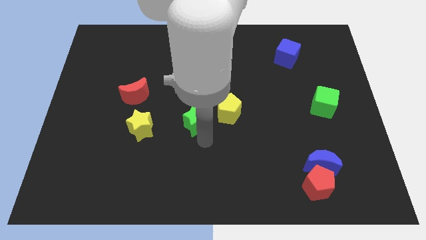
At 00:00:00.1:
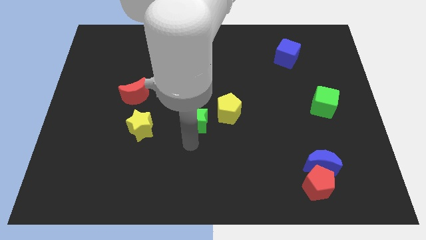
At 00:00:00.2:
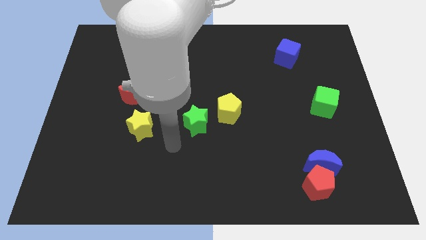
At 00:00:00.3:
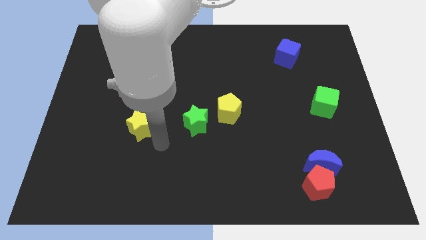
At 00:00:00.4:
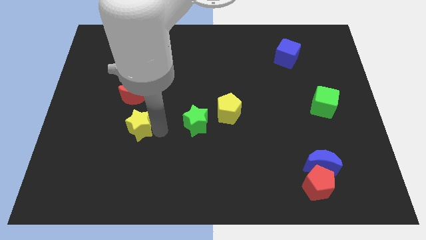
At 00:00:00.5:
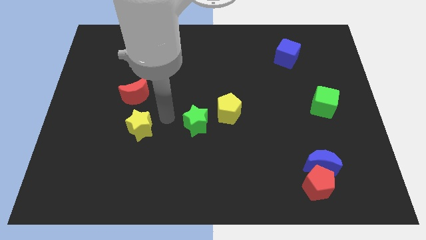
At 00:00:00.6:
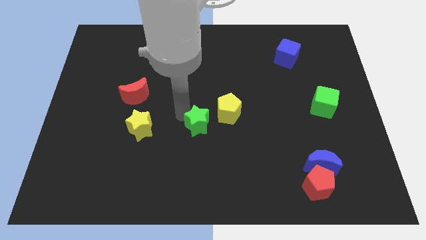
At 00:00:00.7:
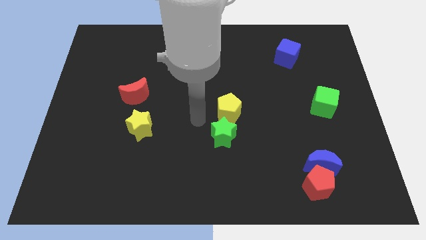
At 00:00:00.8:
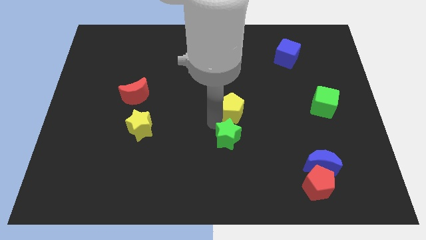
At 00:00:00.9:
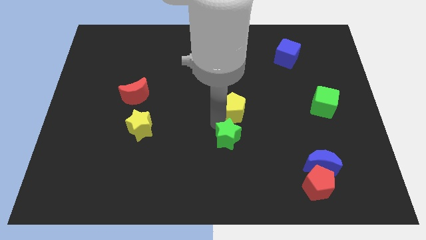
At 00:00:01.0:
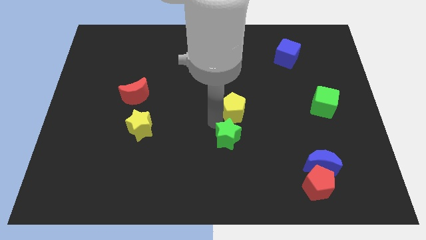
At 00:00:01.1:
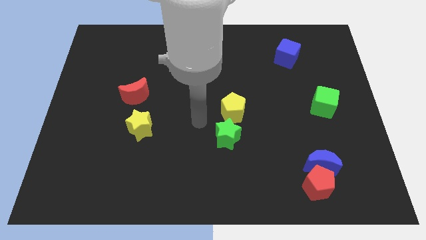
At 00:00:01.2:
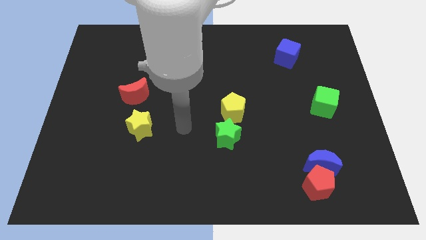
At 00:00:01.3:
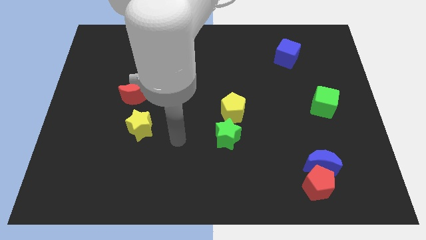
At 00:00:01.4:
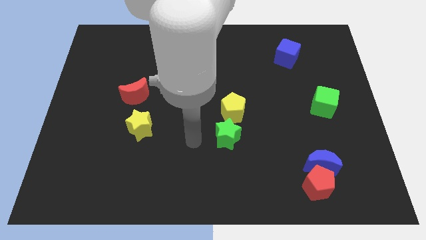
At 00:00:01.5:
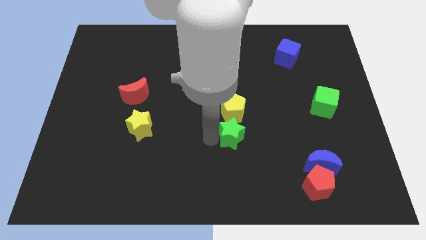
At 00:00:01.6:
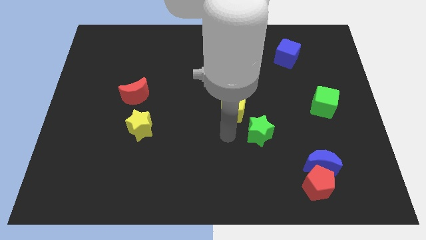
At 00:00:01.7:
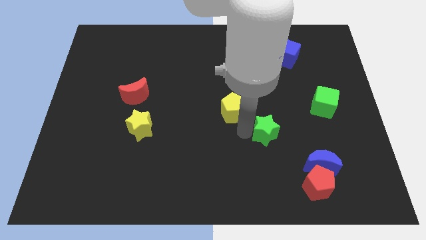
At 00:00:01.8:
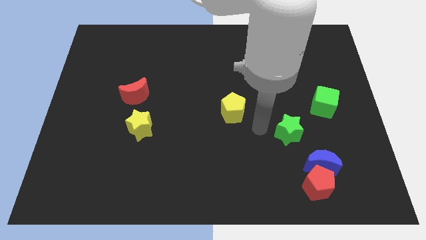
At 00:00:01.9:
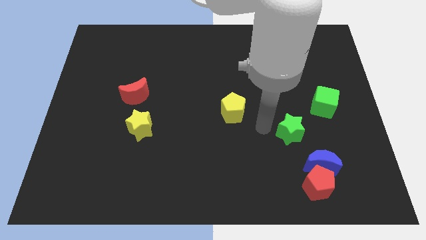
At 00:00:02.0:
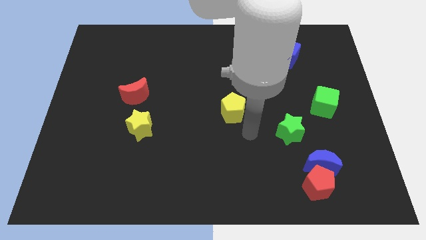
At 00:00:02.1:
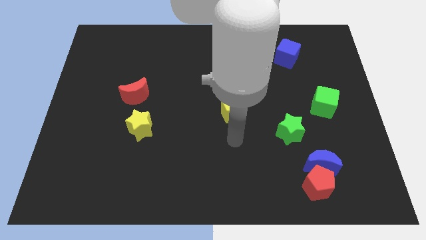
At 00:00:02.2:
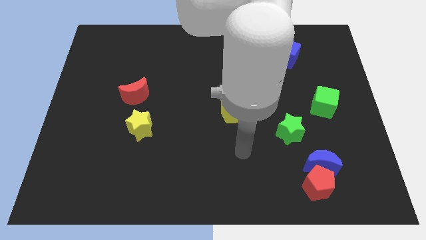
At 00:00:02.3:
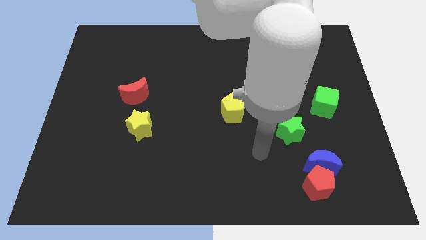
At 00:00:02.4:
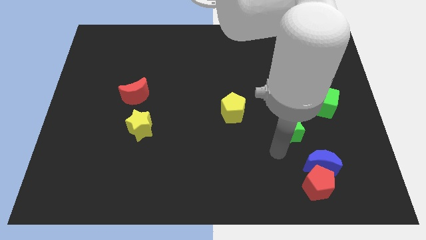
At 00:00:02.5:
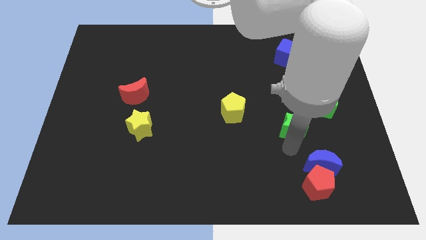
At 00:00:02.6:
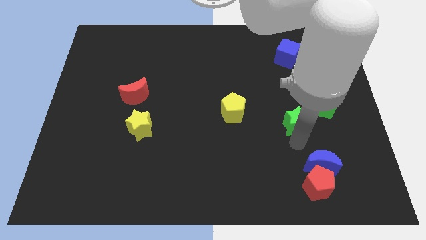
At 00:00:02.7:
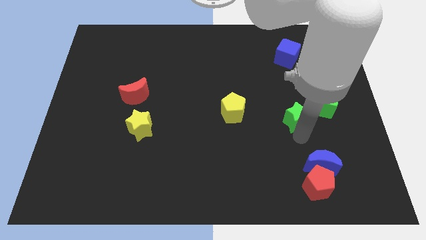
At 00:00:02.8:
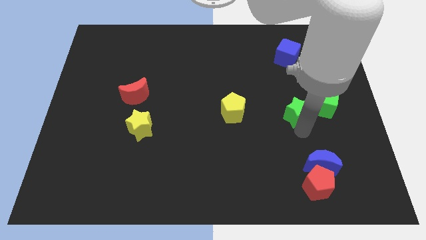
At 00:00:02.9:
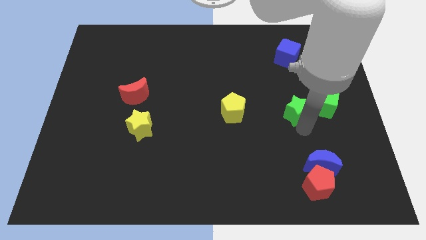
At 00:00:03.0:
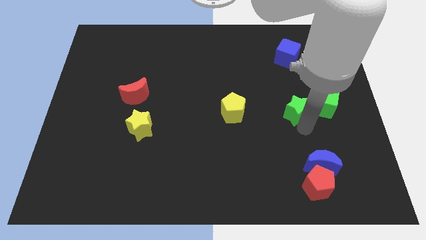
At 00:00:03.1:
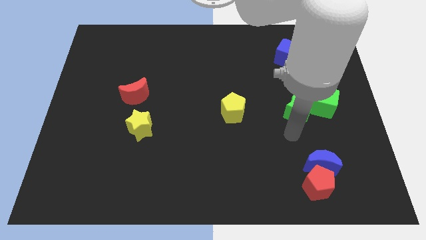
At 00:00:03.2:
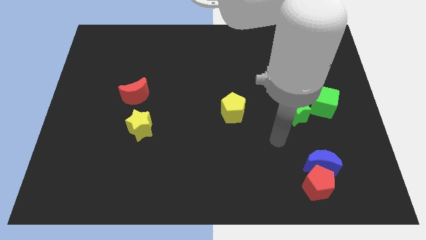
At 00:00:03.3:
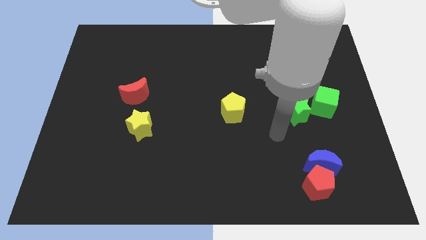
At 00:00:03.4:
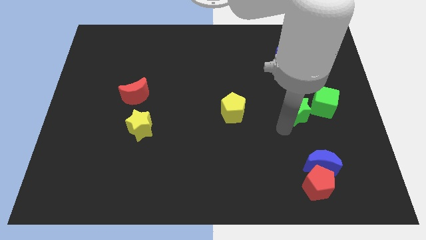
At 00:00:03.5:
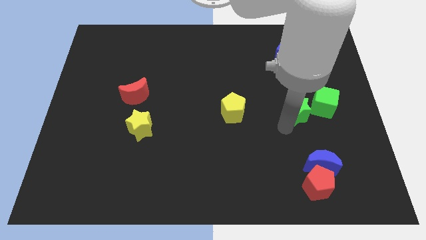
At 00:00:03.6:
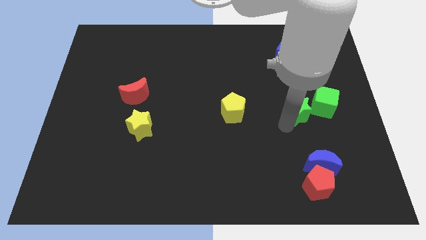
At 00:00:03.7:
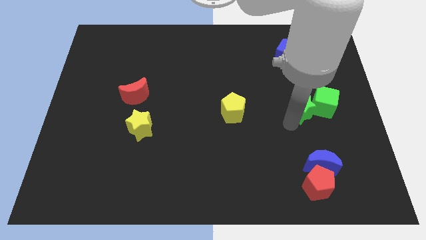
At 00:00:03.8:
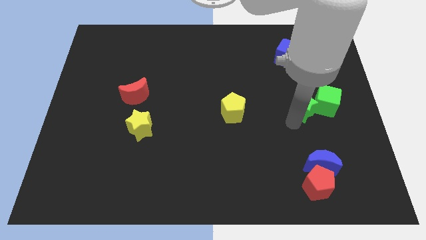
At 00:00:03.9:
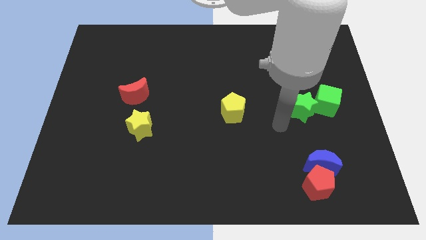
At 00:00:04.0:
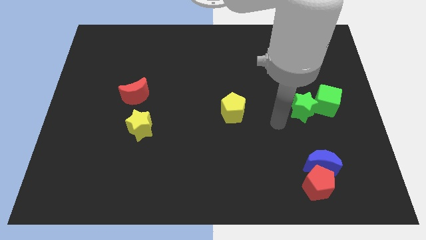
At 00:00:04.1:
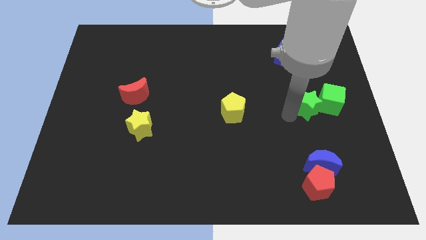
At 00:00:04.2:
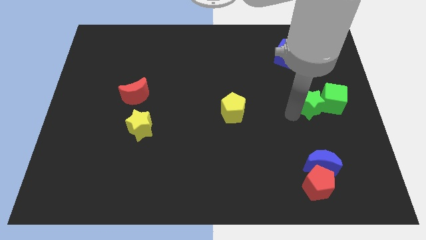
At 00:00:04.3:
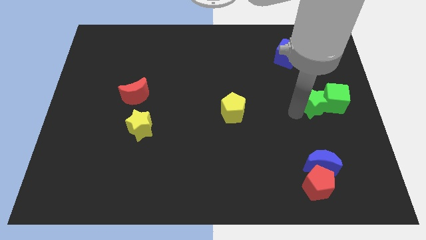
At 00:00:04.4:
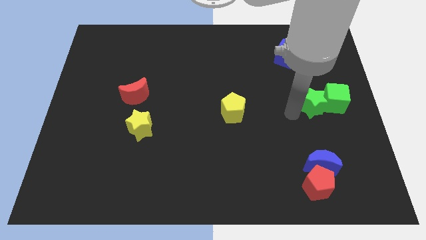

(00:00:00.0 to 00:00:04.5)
push the green star into the green cube

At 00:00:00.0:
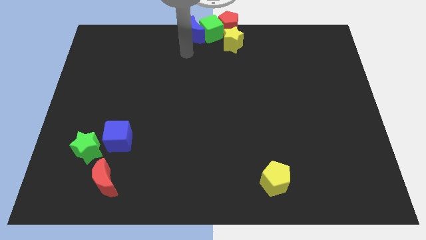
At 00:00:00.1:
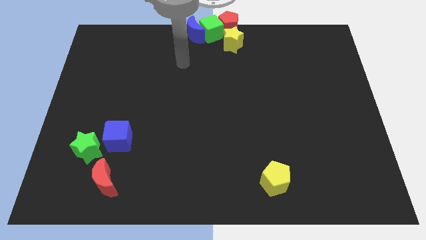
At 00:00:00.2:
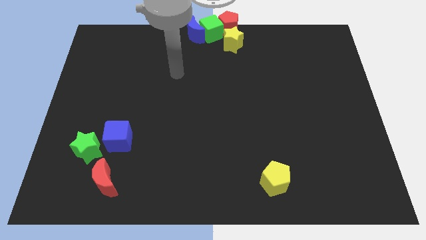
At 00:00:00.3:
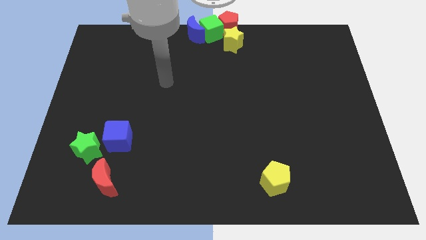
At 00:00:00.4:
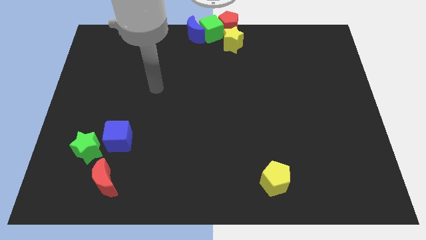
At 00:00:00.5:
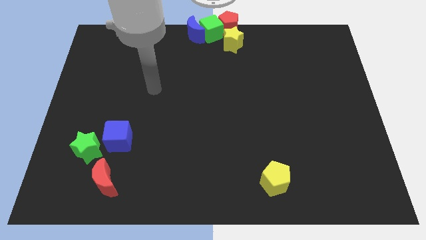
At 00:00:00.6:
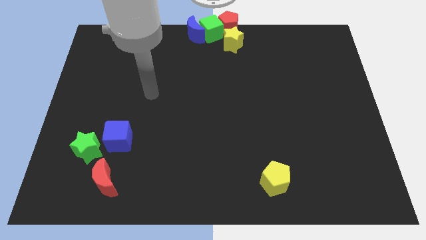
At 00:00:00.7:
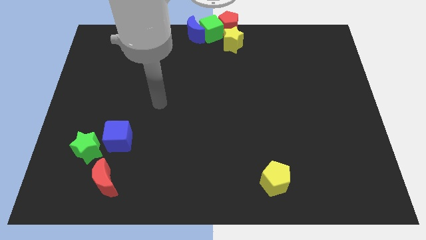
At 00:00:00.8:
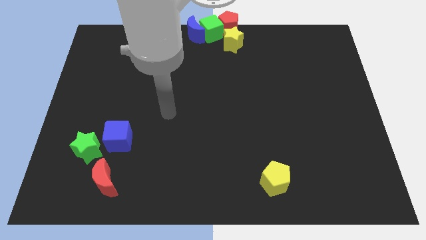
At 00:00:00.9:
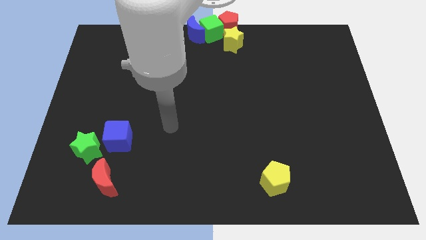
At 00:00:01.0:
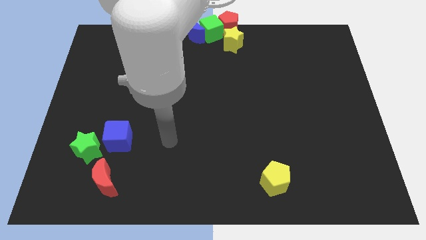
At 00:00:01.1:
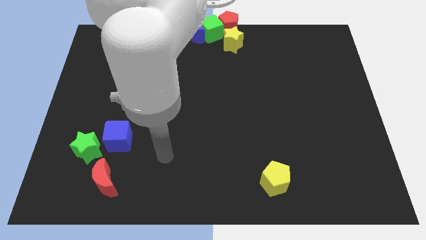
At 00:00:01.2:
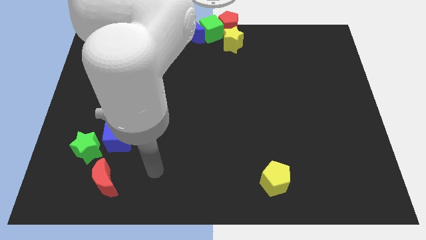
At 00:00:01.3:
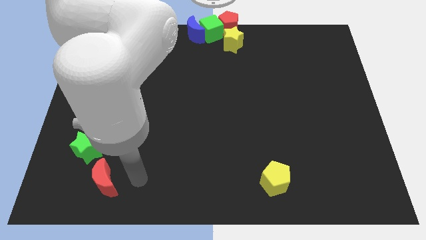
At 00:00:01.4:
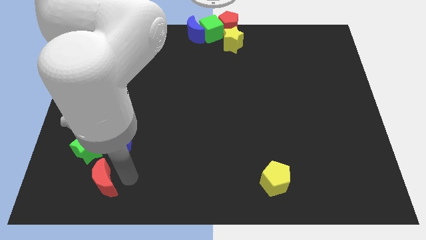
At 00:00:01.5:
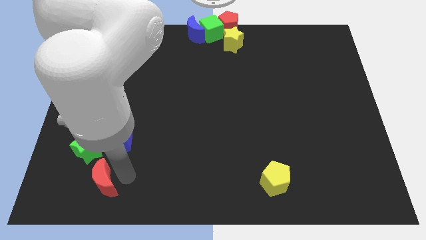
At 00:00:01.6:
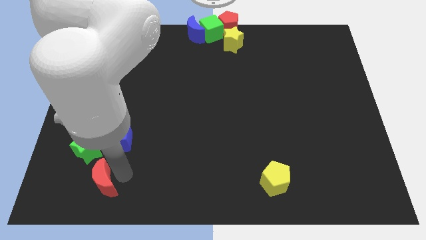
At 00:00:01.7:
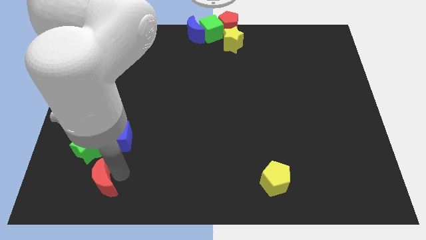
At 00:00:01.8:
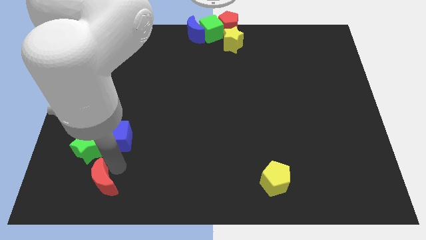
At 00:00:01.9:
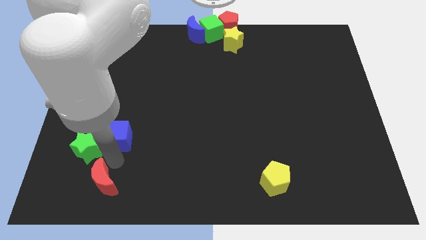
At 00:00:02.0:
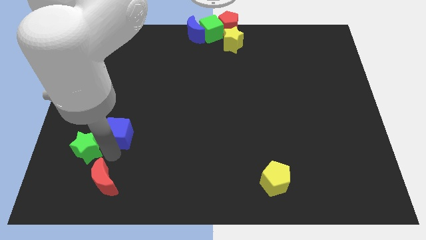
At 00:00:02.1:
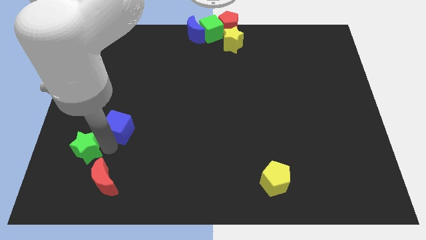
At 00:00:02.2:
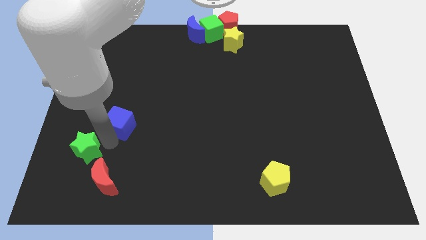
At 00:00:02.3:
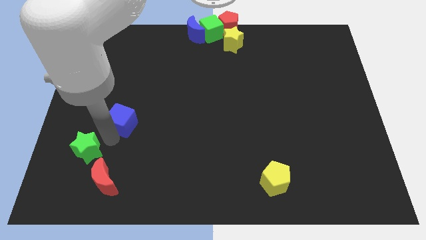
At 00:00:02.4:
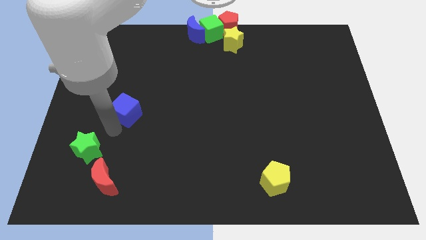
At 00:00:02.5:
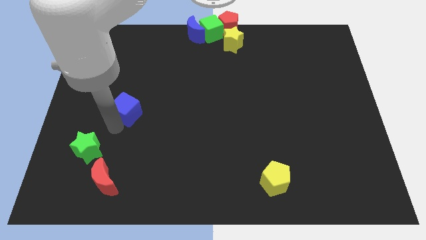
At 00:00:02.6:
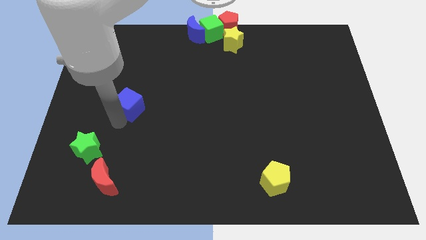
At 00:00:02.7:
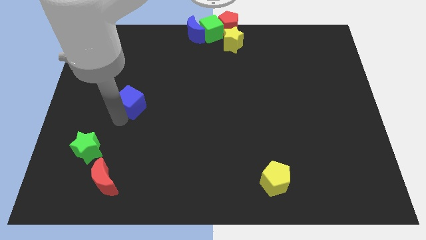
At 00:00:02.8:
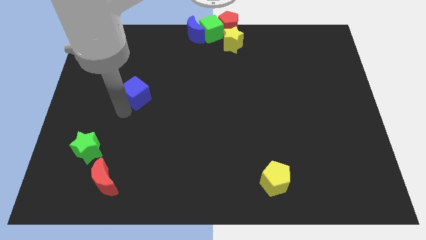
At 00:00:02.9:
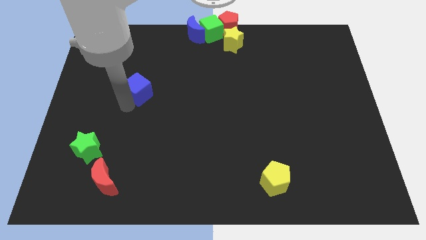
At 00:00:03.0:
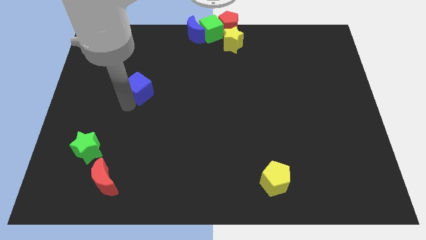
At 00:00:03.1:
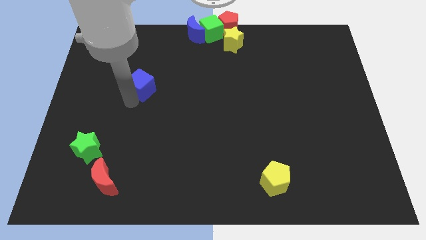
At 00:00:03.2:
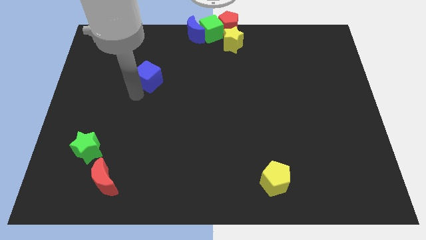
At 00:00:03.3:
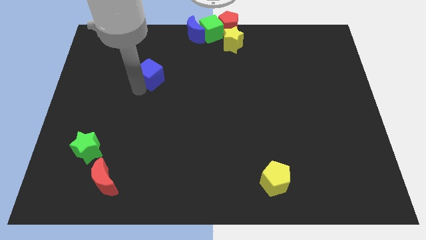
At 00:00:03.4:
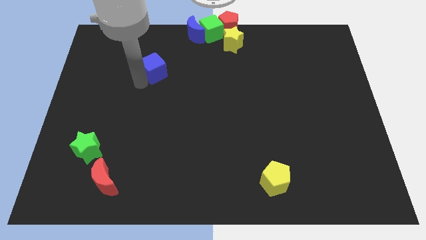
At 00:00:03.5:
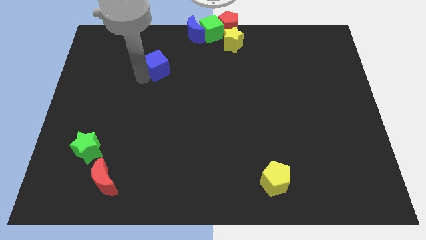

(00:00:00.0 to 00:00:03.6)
move the arm away from the blue moon

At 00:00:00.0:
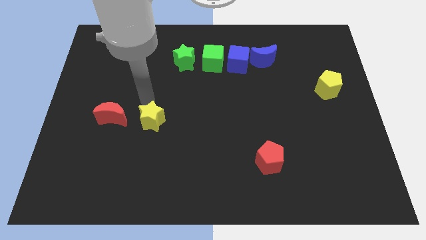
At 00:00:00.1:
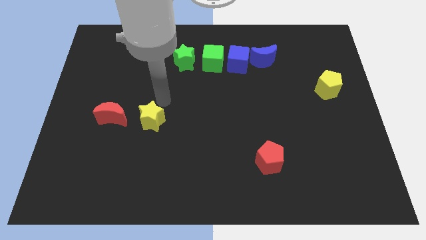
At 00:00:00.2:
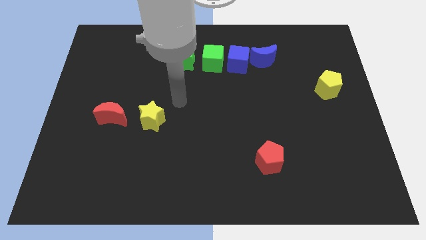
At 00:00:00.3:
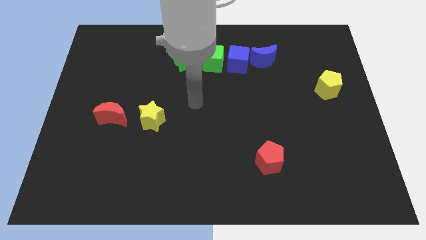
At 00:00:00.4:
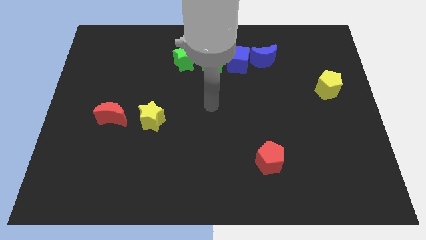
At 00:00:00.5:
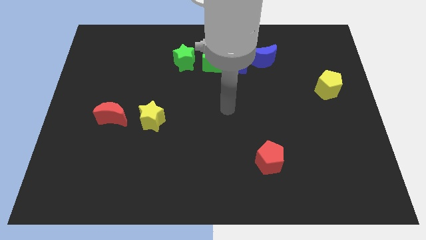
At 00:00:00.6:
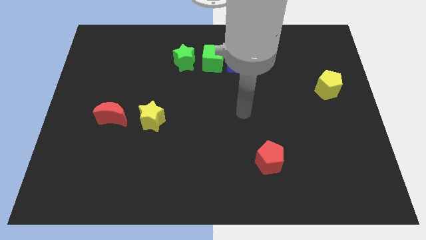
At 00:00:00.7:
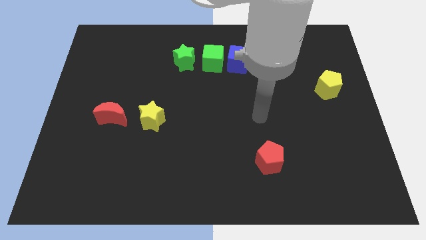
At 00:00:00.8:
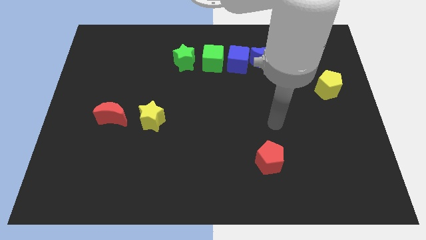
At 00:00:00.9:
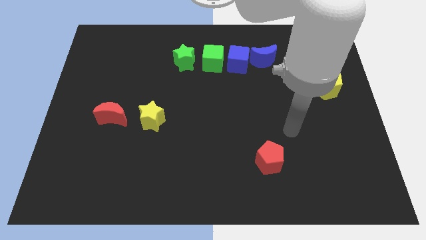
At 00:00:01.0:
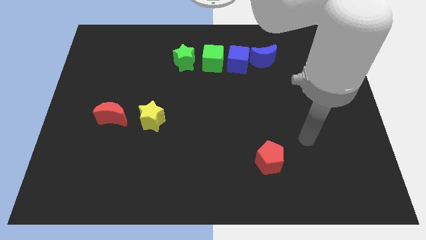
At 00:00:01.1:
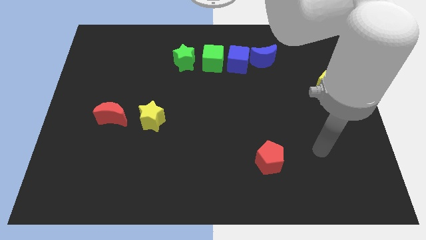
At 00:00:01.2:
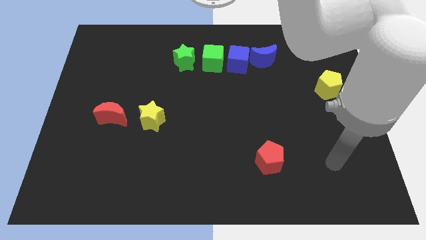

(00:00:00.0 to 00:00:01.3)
place your hand at the right side of the red pentagon
